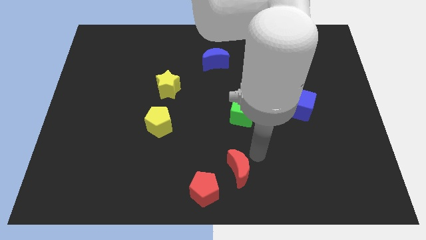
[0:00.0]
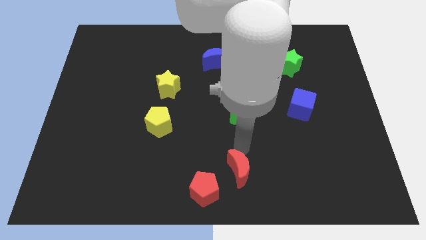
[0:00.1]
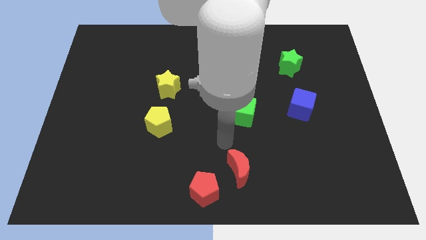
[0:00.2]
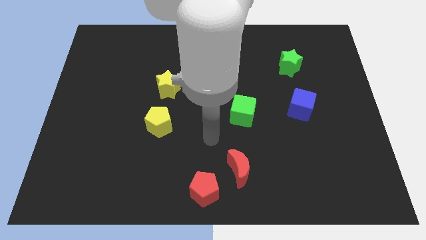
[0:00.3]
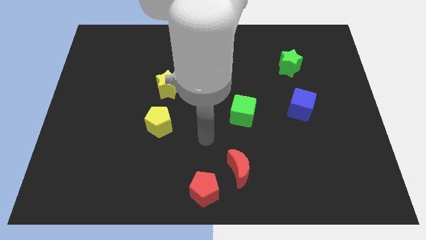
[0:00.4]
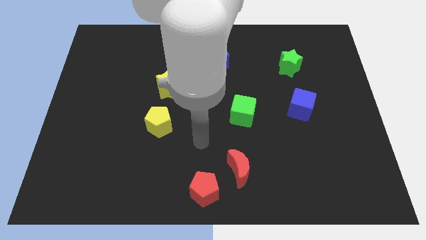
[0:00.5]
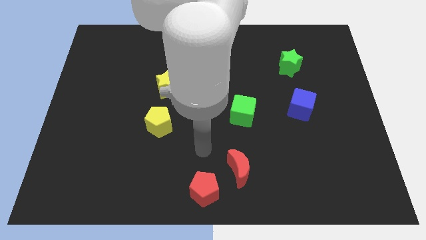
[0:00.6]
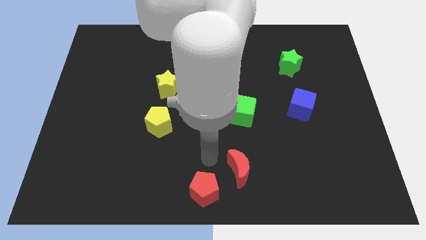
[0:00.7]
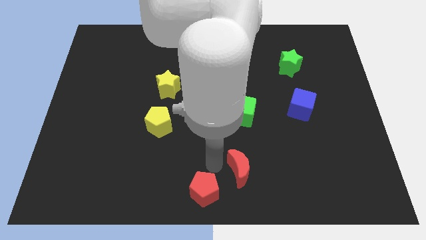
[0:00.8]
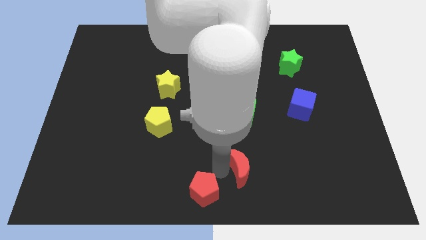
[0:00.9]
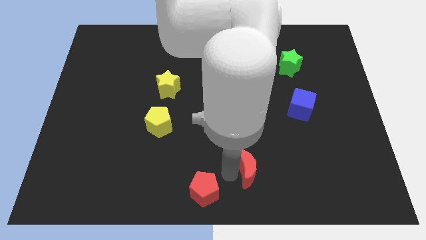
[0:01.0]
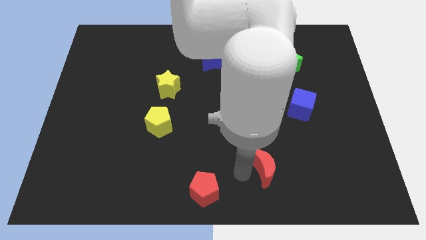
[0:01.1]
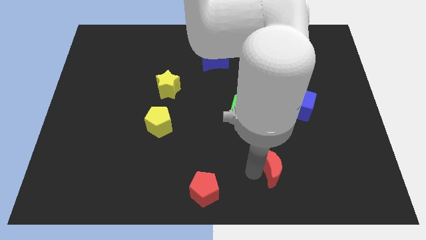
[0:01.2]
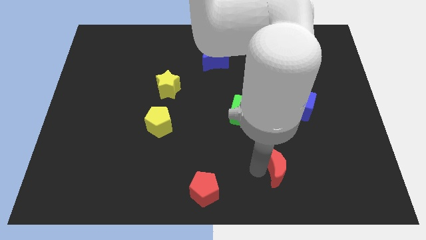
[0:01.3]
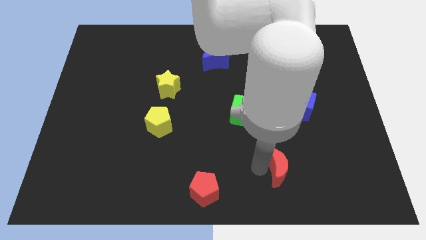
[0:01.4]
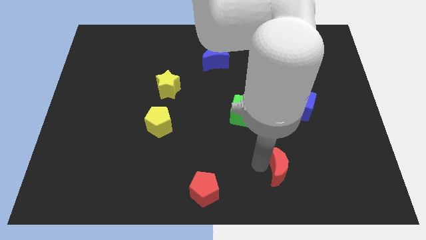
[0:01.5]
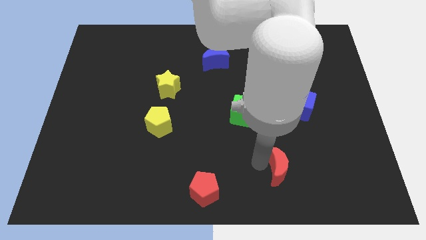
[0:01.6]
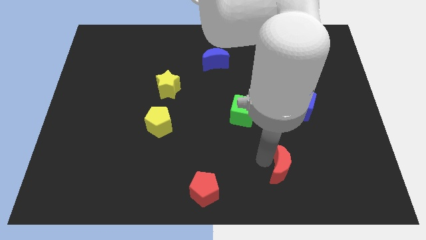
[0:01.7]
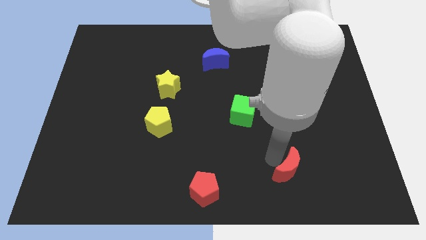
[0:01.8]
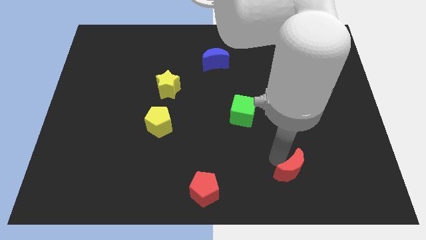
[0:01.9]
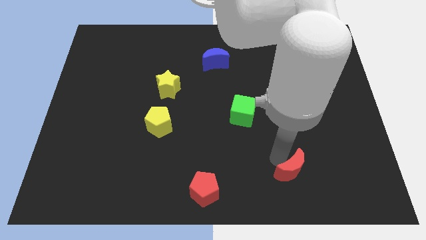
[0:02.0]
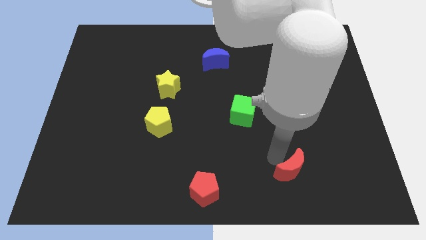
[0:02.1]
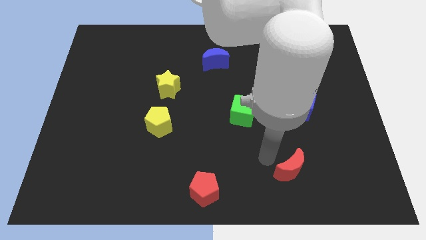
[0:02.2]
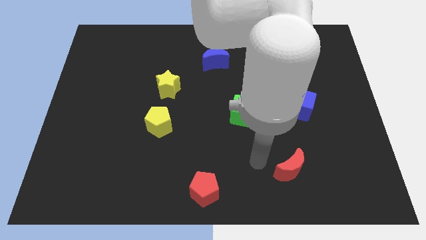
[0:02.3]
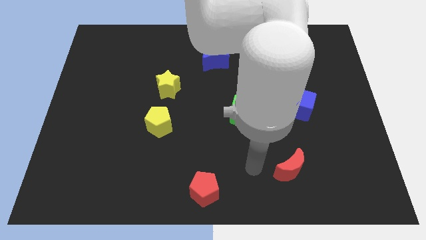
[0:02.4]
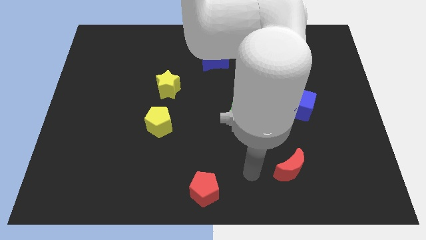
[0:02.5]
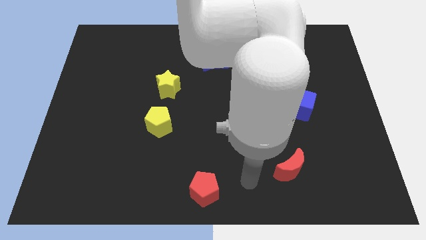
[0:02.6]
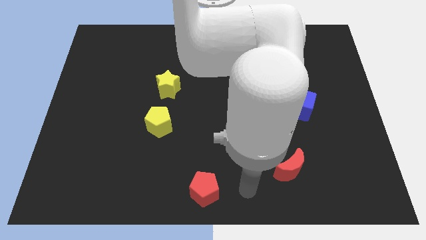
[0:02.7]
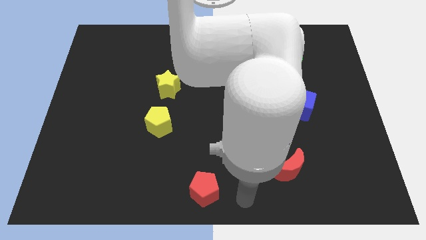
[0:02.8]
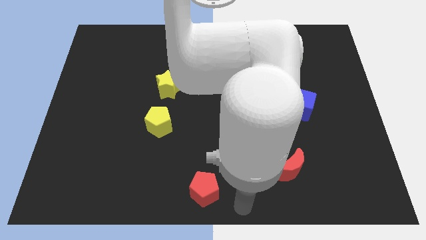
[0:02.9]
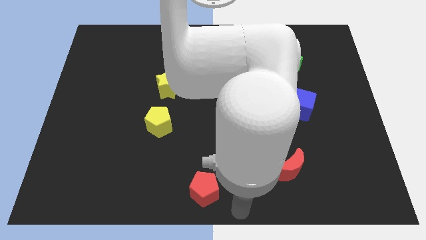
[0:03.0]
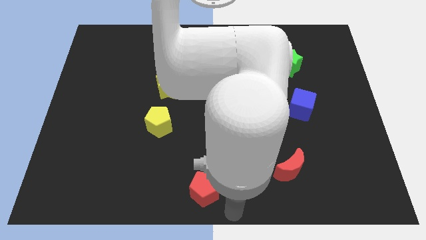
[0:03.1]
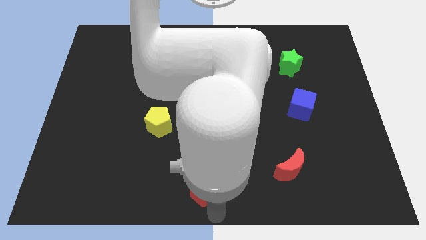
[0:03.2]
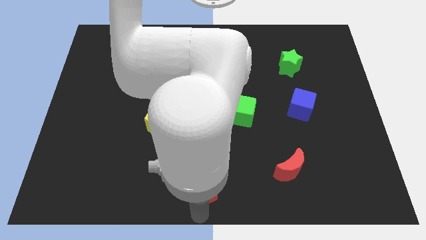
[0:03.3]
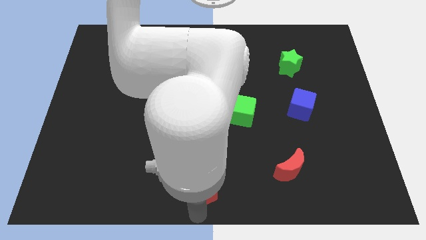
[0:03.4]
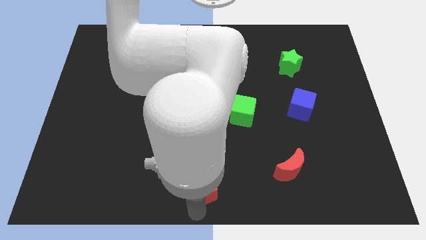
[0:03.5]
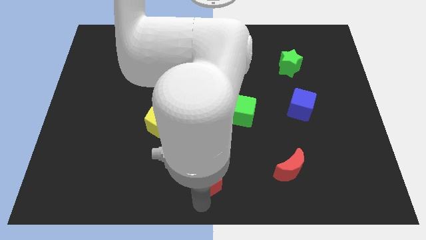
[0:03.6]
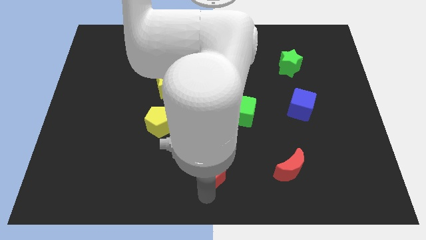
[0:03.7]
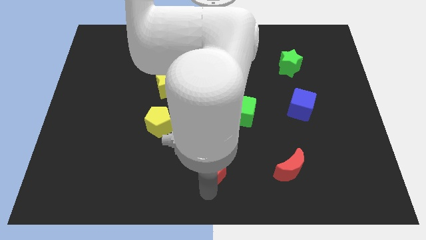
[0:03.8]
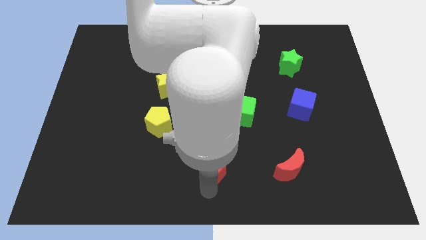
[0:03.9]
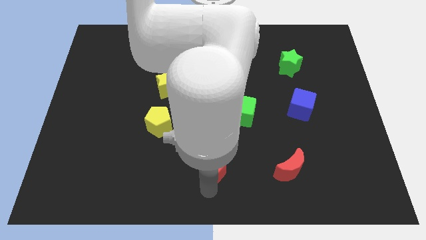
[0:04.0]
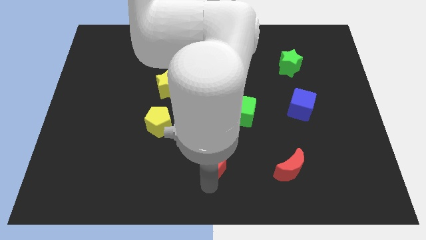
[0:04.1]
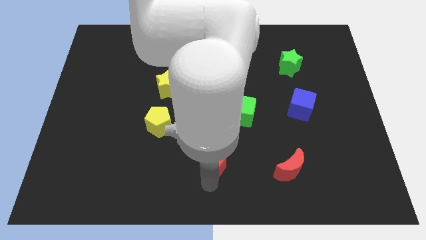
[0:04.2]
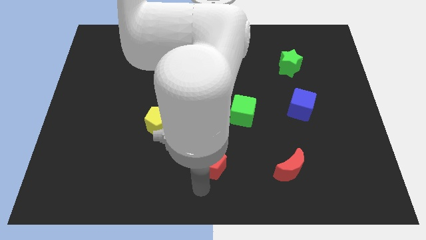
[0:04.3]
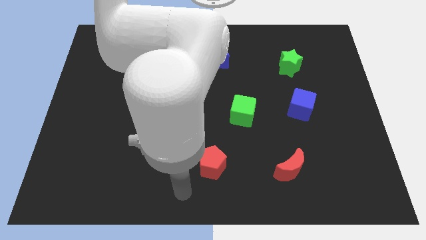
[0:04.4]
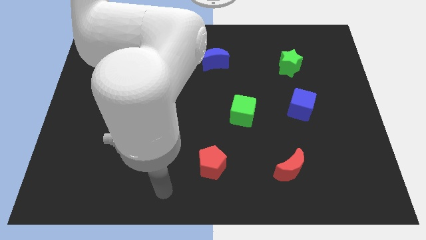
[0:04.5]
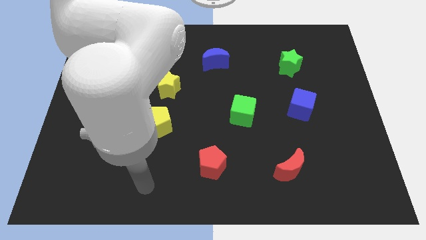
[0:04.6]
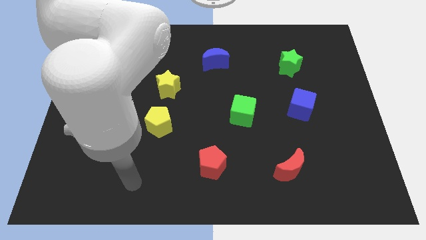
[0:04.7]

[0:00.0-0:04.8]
place red pentagon to the left of red moon

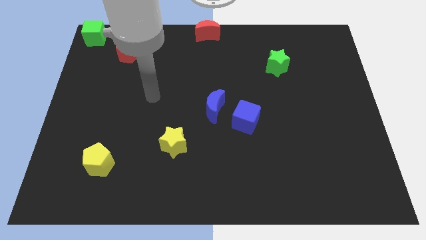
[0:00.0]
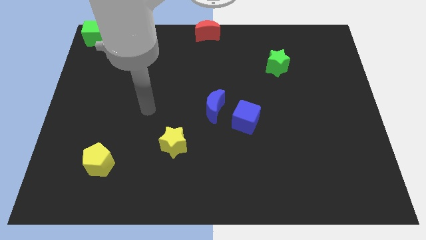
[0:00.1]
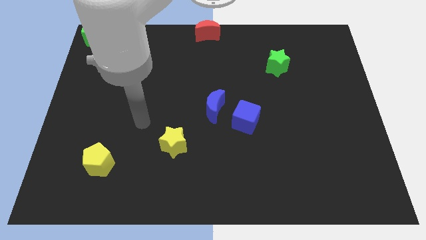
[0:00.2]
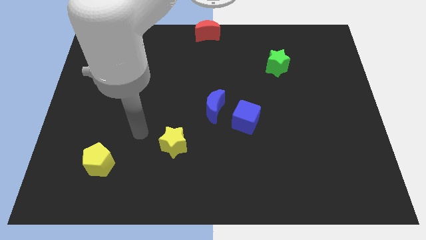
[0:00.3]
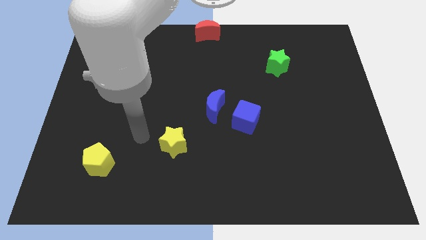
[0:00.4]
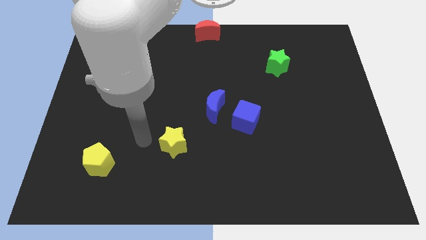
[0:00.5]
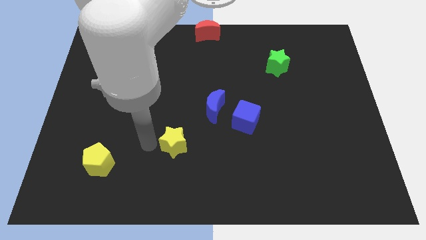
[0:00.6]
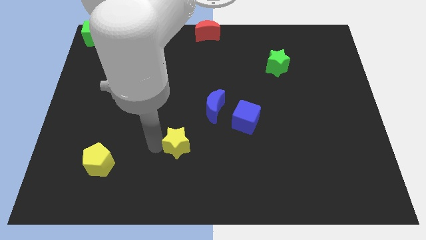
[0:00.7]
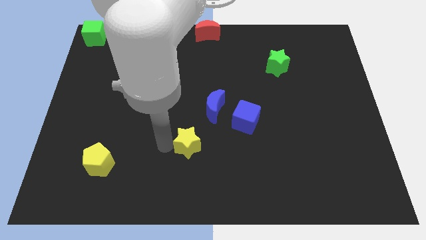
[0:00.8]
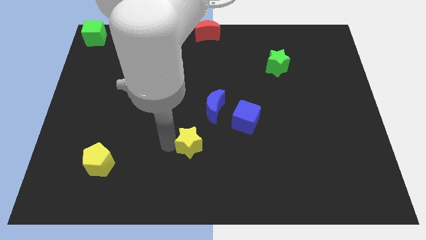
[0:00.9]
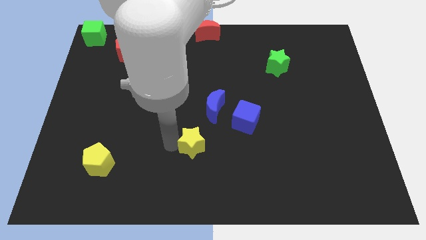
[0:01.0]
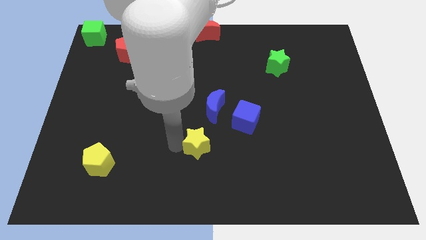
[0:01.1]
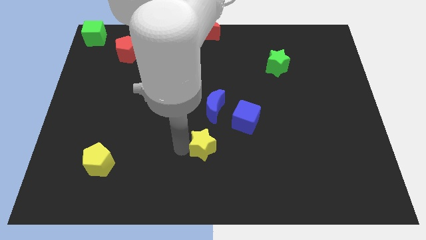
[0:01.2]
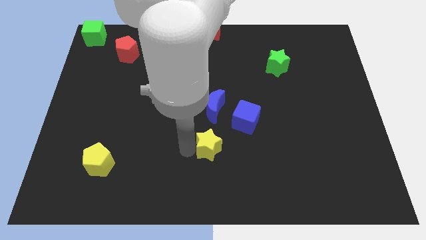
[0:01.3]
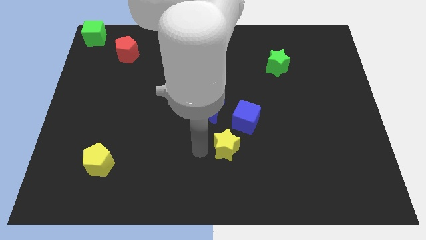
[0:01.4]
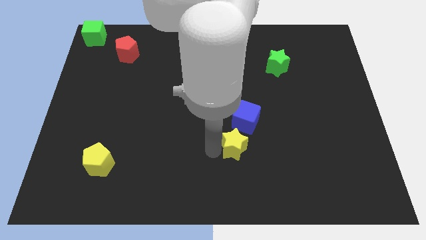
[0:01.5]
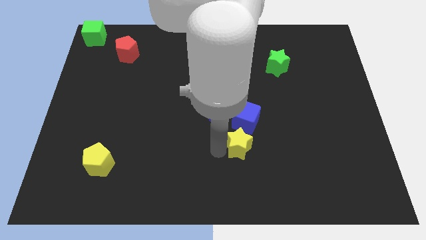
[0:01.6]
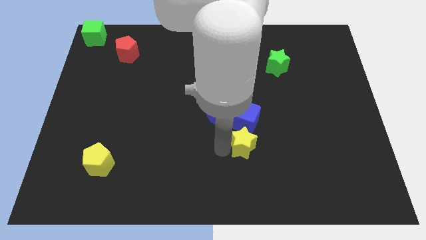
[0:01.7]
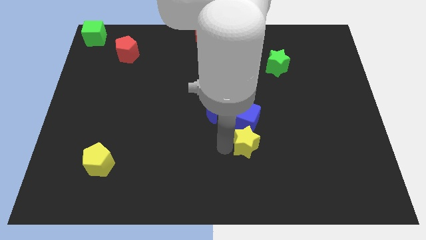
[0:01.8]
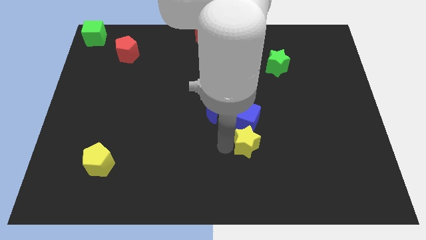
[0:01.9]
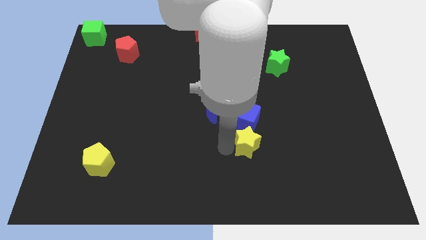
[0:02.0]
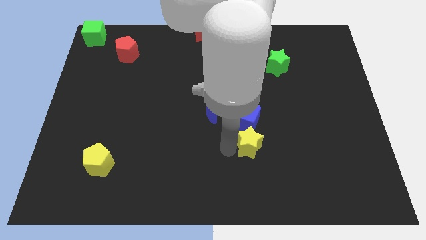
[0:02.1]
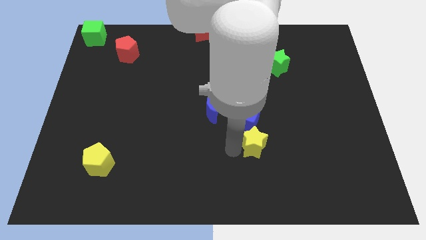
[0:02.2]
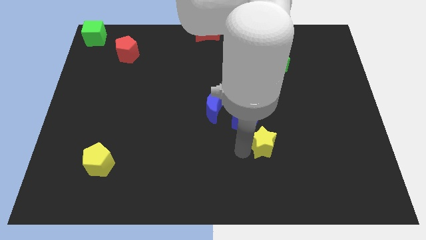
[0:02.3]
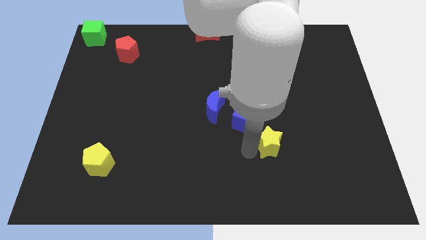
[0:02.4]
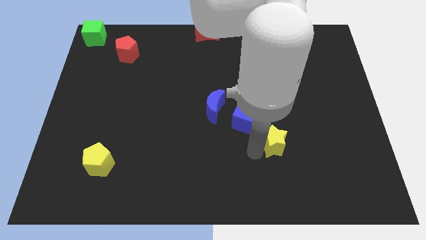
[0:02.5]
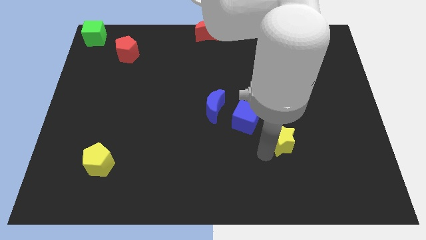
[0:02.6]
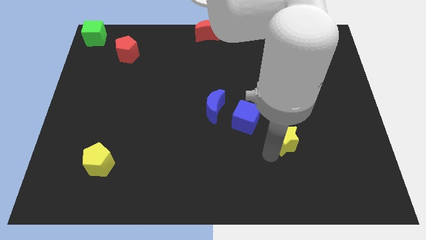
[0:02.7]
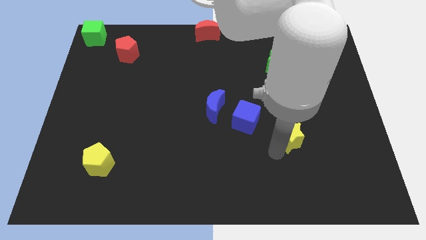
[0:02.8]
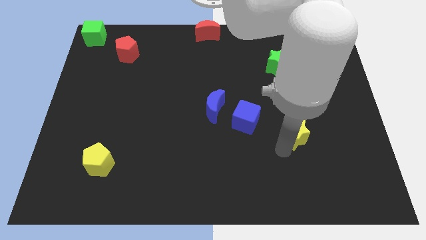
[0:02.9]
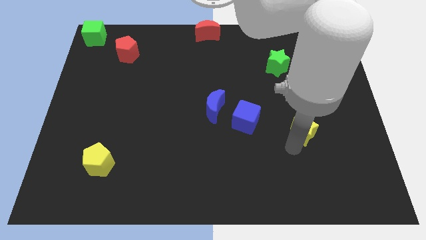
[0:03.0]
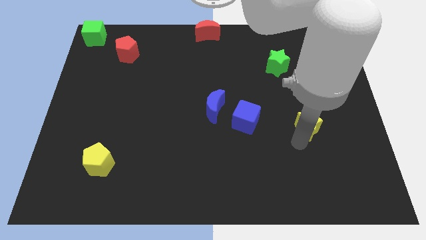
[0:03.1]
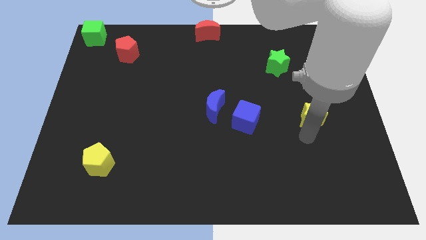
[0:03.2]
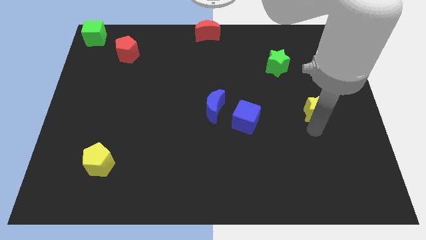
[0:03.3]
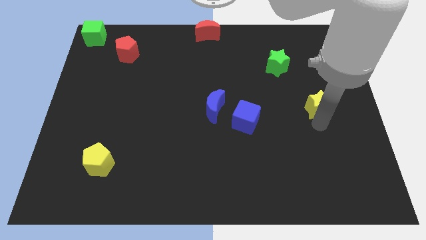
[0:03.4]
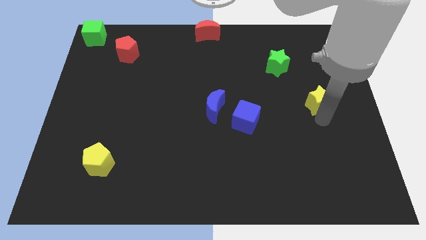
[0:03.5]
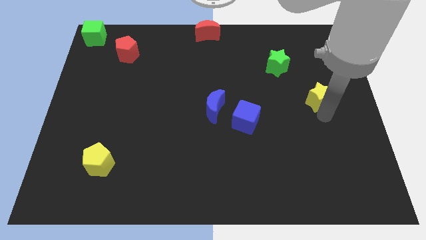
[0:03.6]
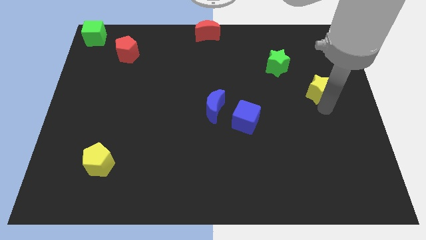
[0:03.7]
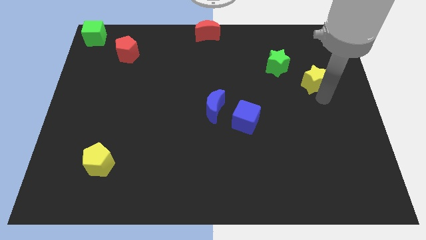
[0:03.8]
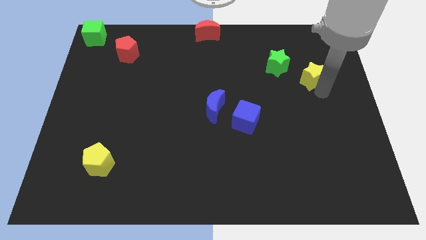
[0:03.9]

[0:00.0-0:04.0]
place the yellow star right to the green star
